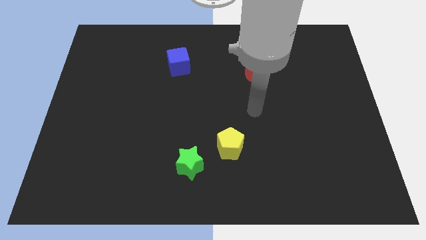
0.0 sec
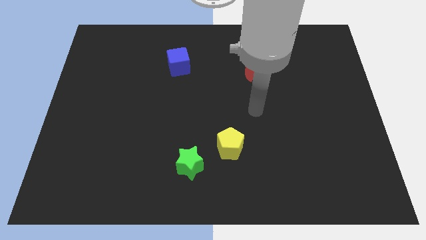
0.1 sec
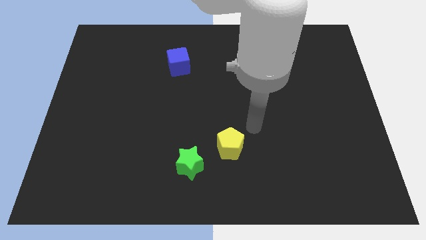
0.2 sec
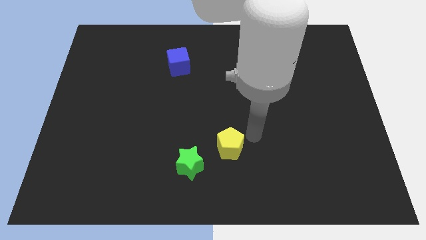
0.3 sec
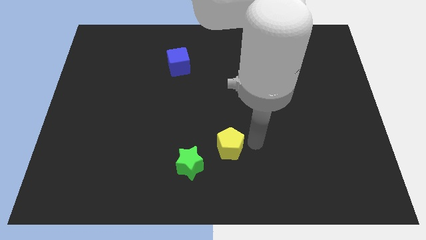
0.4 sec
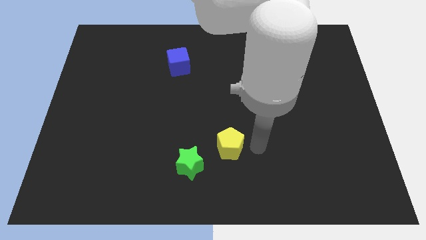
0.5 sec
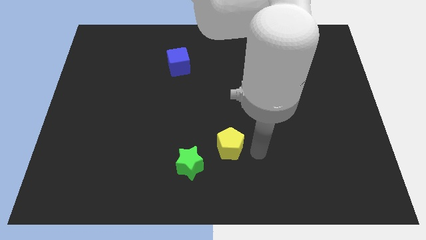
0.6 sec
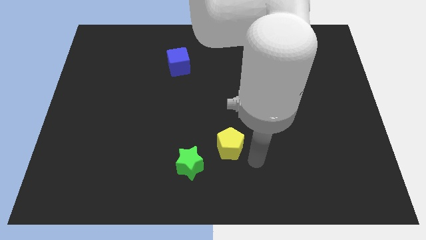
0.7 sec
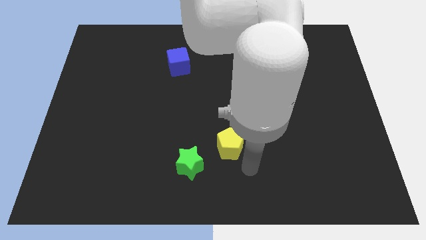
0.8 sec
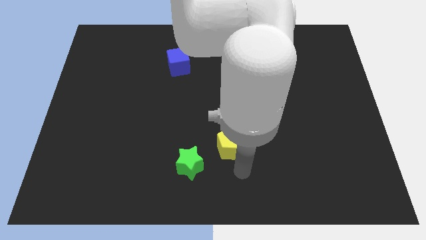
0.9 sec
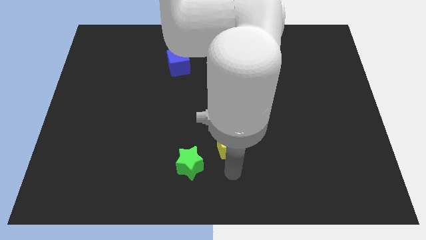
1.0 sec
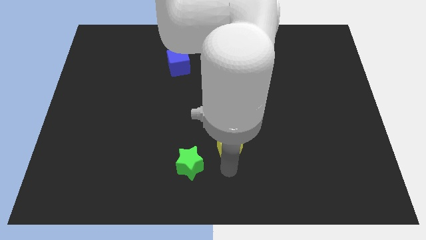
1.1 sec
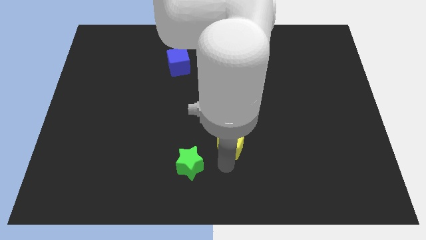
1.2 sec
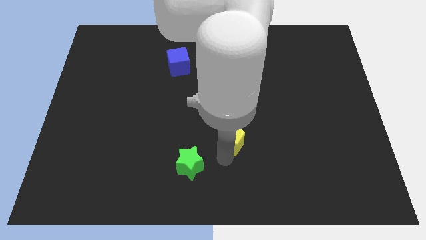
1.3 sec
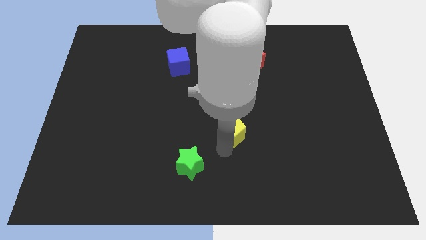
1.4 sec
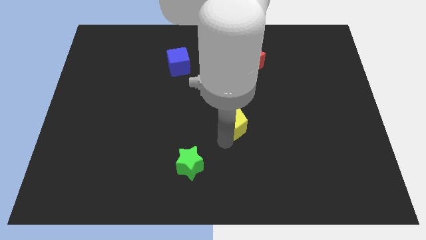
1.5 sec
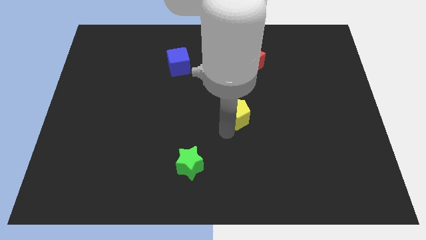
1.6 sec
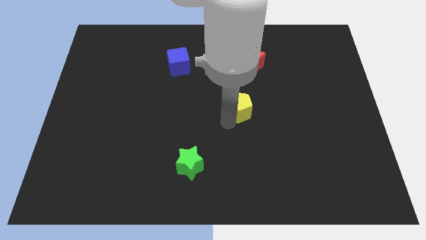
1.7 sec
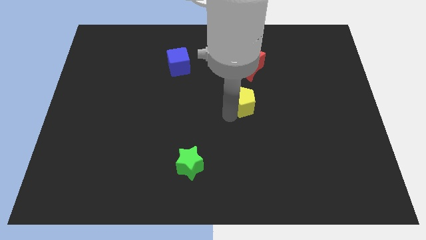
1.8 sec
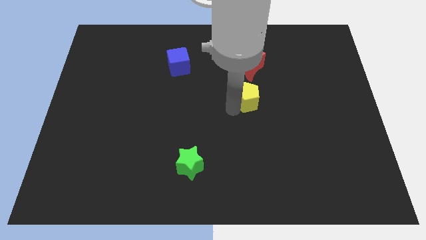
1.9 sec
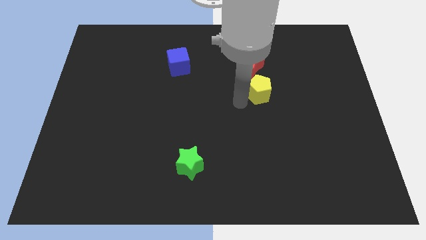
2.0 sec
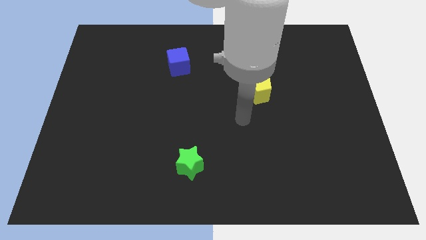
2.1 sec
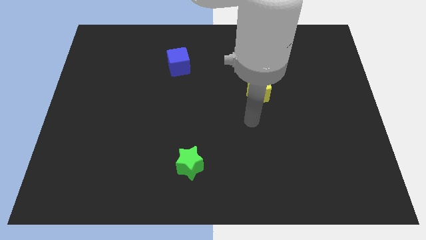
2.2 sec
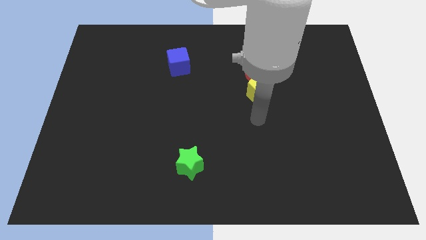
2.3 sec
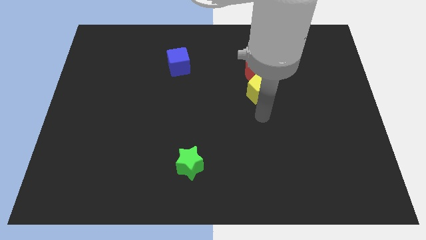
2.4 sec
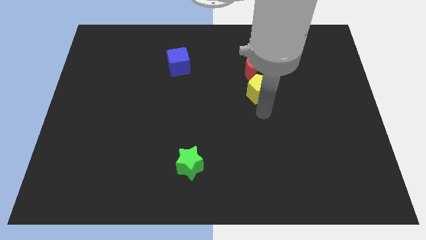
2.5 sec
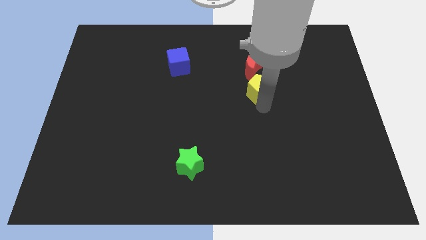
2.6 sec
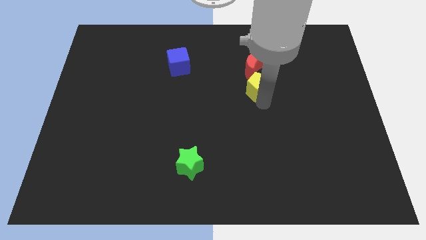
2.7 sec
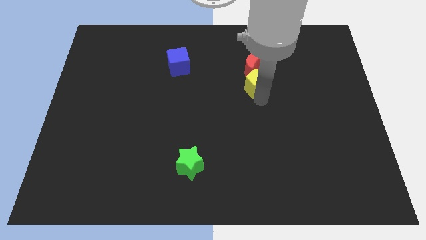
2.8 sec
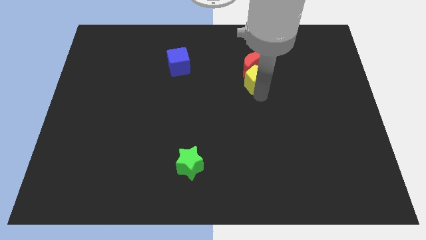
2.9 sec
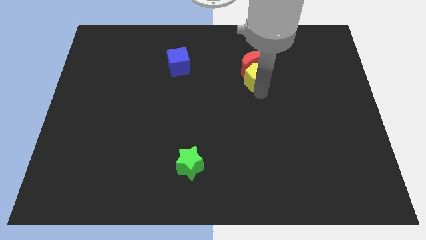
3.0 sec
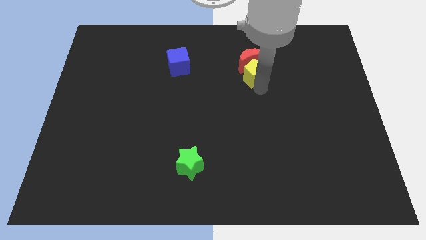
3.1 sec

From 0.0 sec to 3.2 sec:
move the pentagon towards the moon

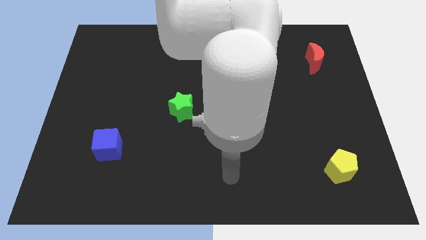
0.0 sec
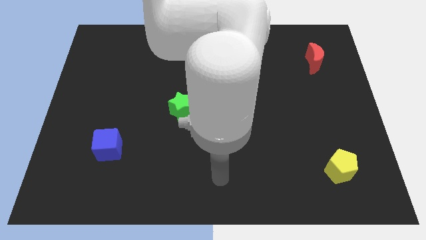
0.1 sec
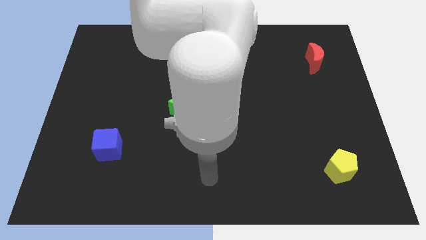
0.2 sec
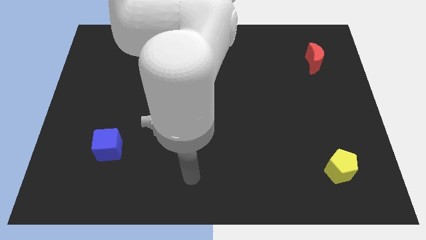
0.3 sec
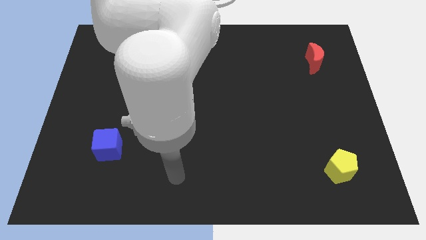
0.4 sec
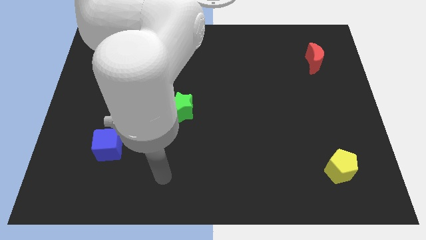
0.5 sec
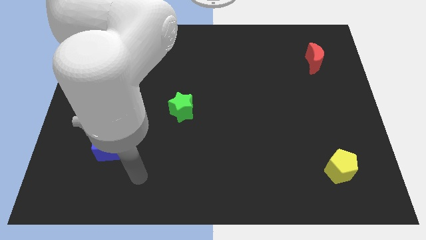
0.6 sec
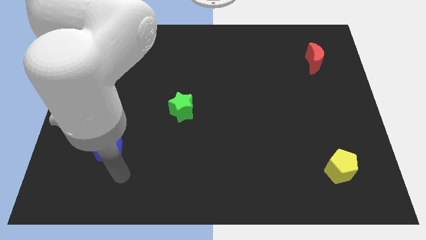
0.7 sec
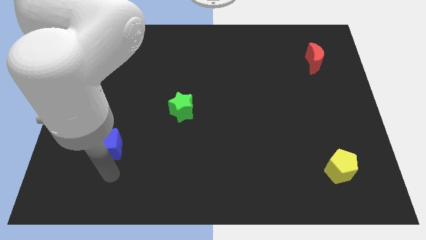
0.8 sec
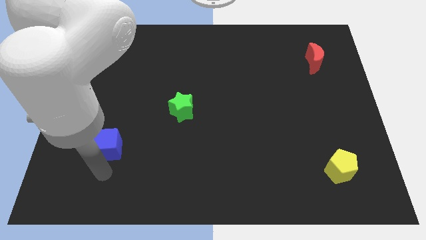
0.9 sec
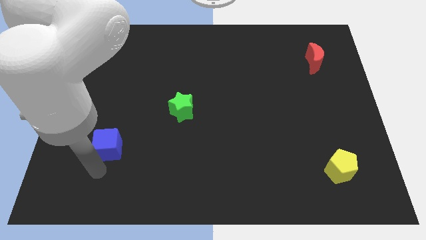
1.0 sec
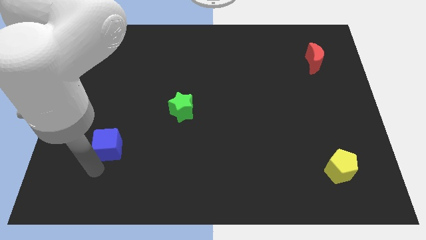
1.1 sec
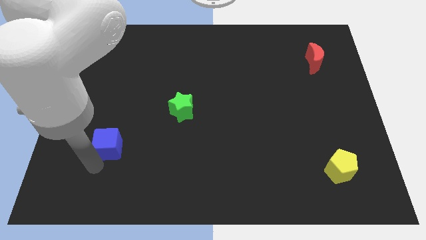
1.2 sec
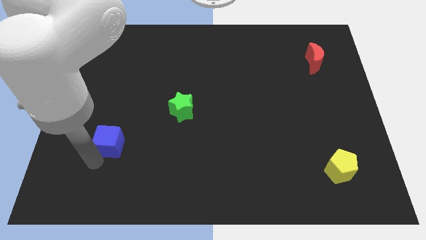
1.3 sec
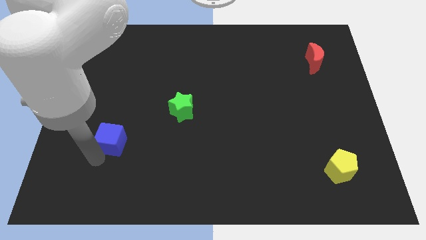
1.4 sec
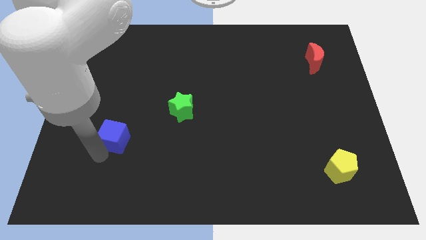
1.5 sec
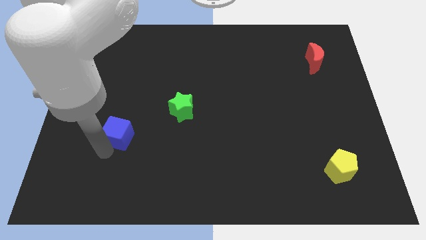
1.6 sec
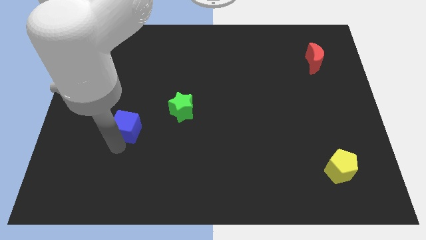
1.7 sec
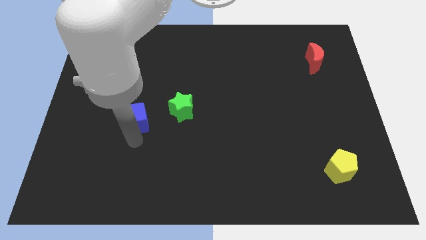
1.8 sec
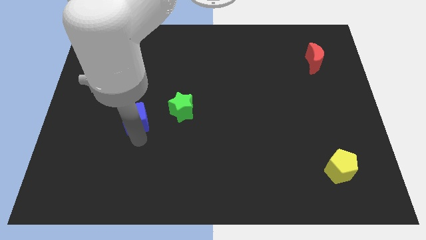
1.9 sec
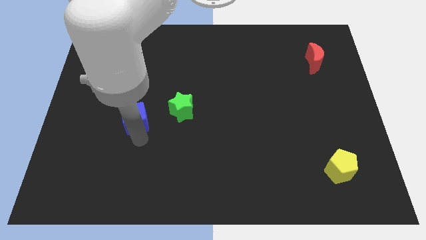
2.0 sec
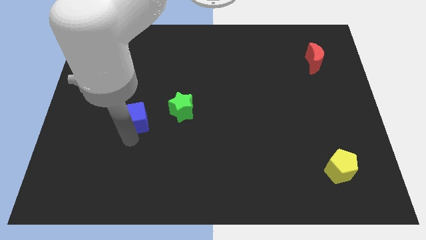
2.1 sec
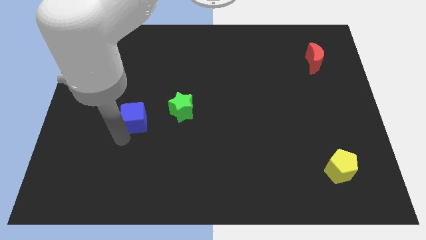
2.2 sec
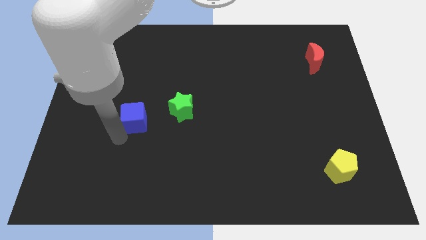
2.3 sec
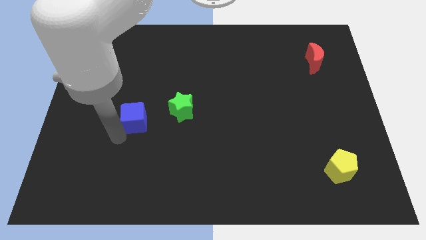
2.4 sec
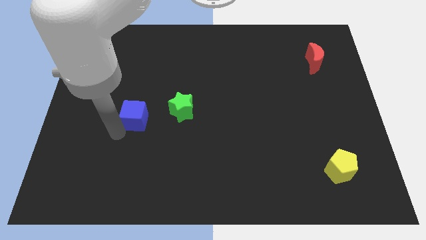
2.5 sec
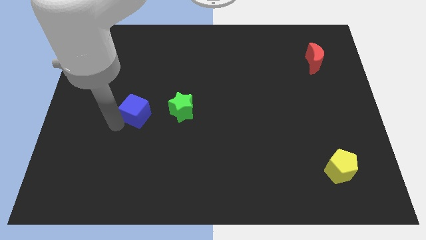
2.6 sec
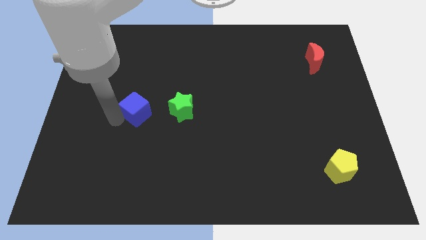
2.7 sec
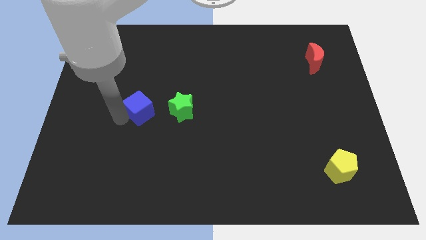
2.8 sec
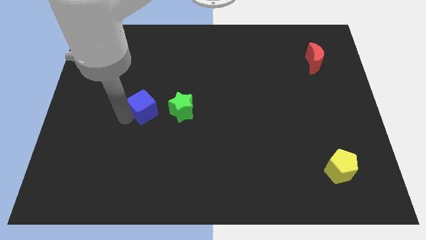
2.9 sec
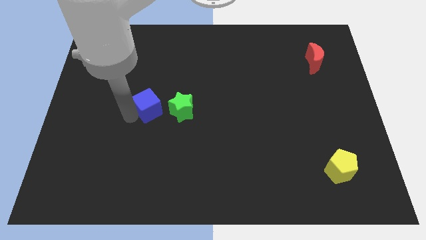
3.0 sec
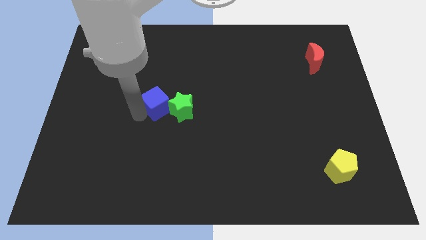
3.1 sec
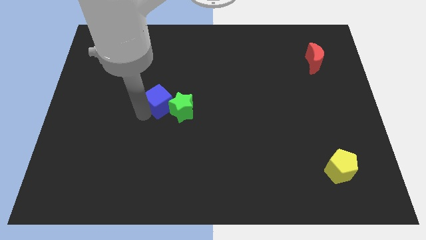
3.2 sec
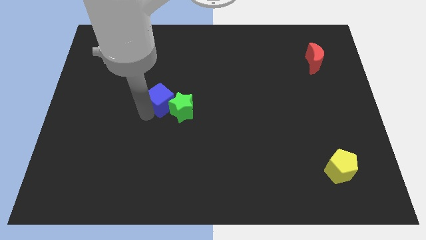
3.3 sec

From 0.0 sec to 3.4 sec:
push the blue cube to the green block

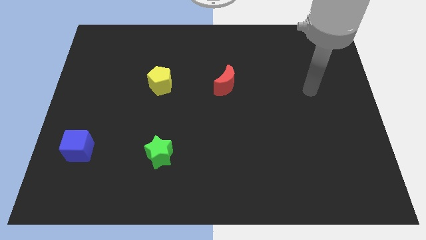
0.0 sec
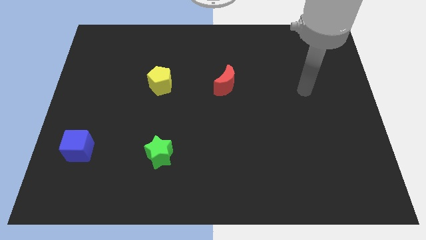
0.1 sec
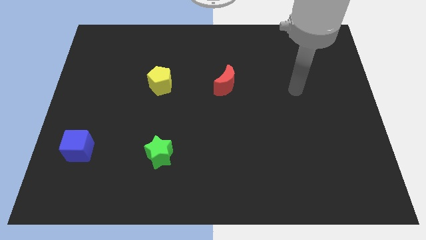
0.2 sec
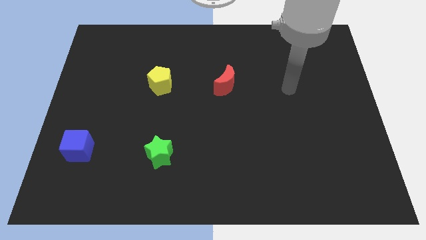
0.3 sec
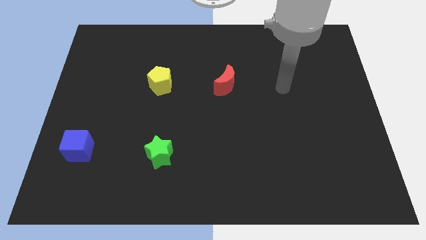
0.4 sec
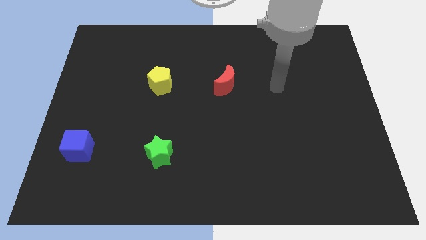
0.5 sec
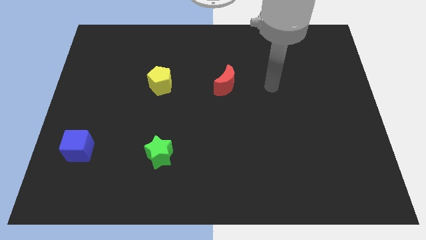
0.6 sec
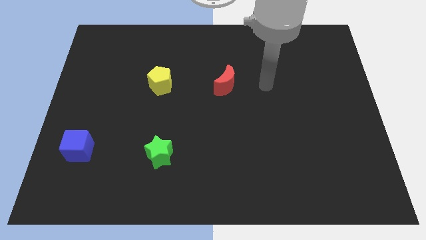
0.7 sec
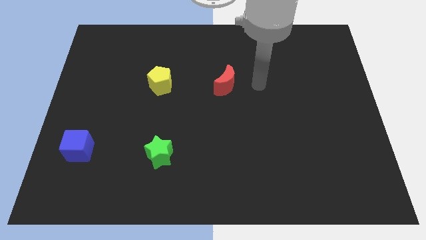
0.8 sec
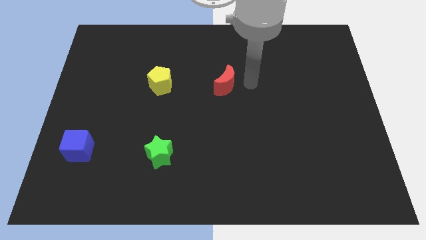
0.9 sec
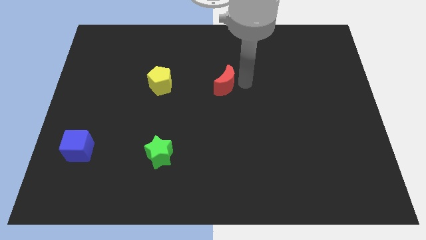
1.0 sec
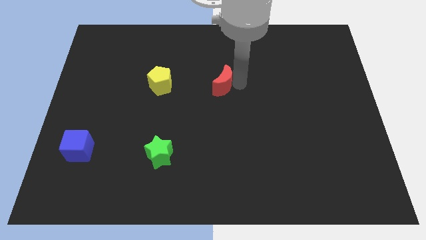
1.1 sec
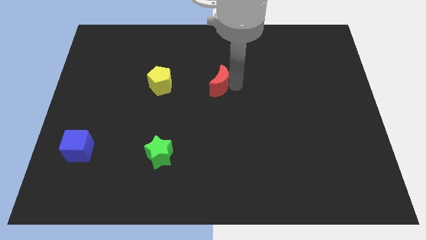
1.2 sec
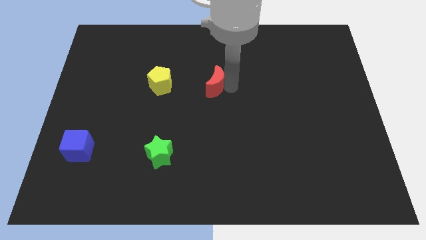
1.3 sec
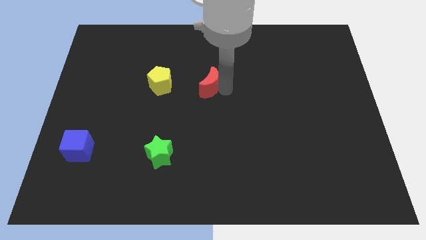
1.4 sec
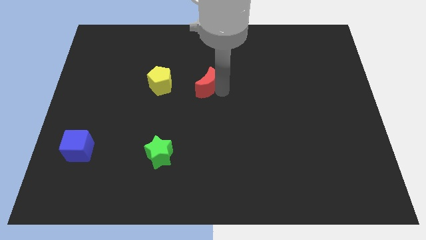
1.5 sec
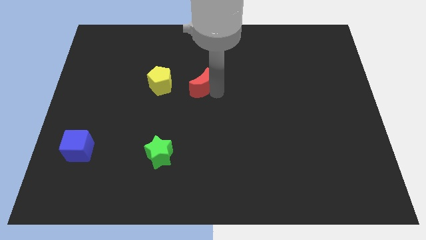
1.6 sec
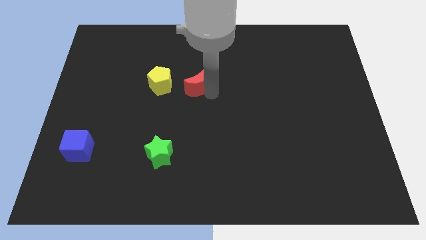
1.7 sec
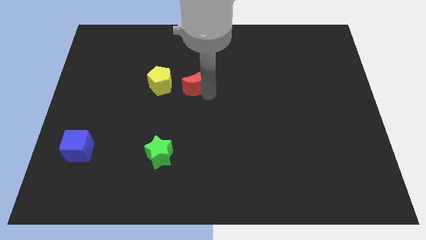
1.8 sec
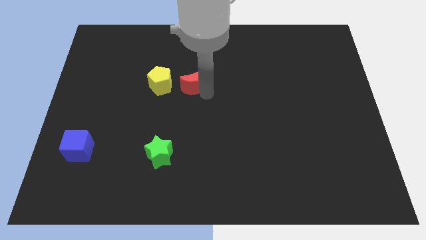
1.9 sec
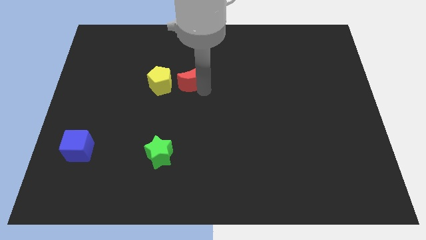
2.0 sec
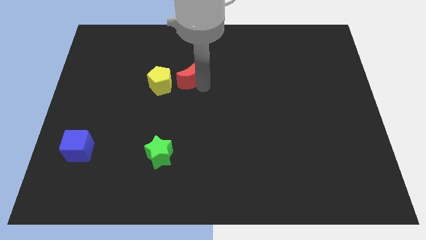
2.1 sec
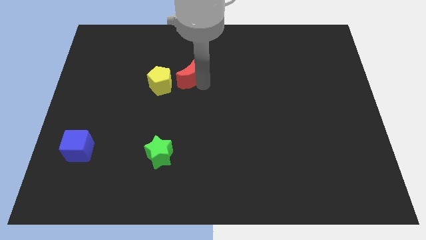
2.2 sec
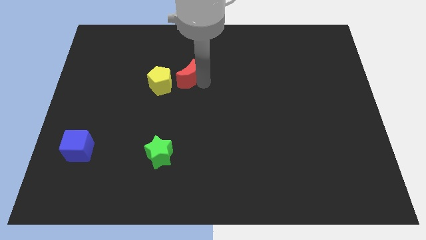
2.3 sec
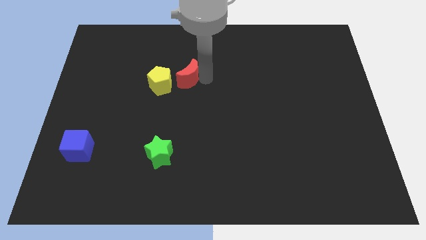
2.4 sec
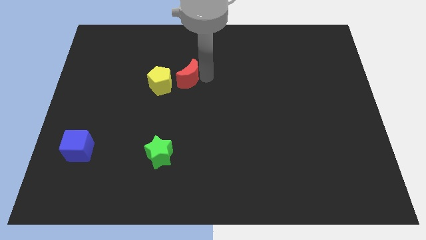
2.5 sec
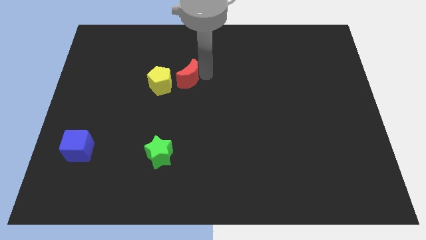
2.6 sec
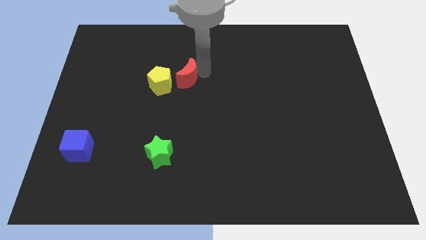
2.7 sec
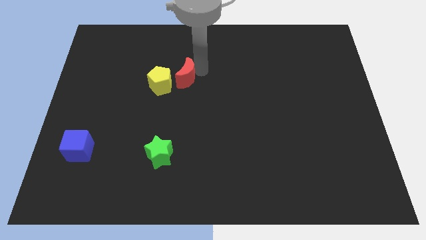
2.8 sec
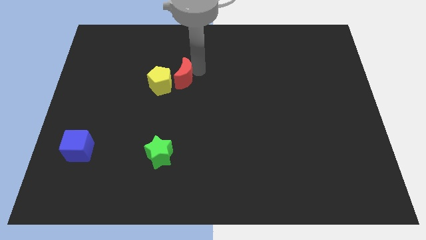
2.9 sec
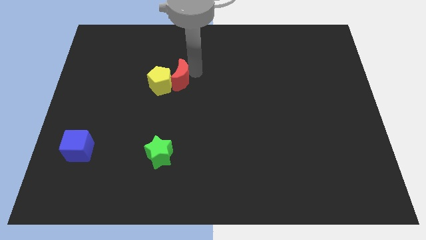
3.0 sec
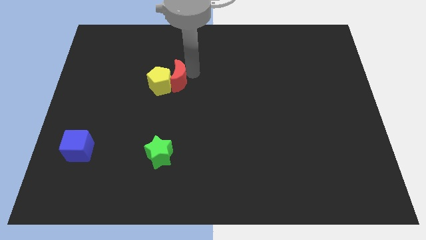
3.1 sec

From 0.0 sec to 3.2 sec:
slide the red block next to the yellow block
